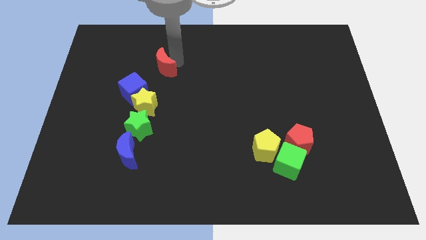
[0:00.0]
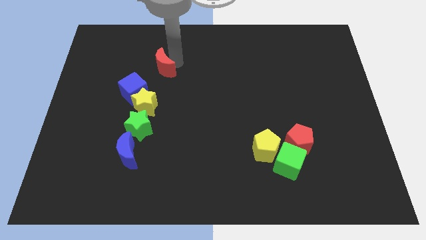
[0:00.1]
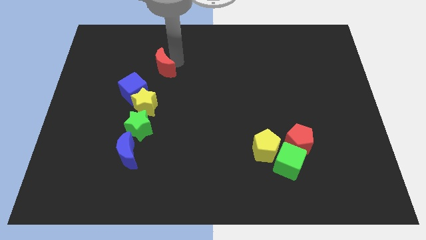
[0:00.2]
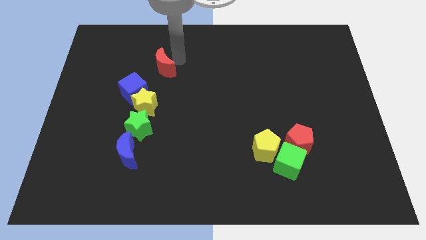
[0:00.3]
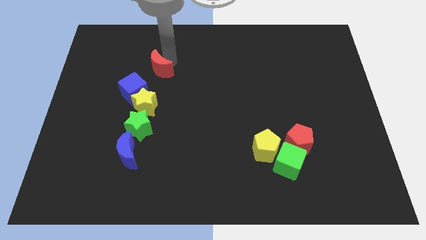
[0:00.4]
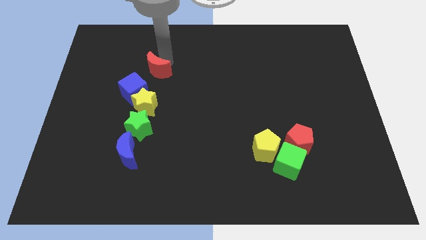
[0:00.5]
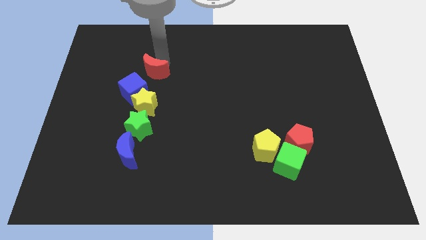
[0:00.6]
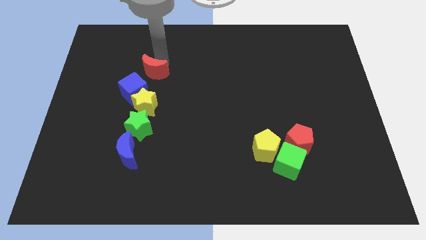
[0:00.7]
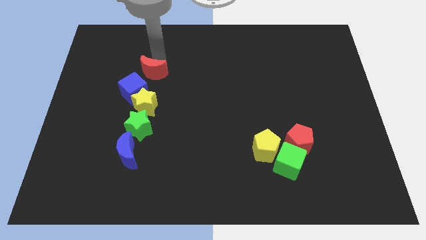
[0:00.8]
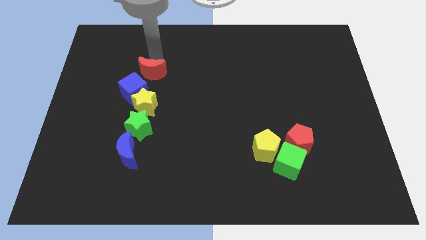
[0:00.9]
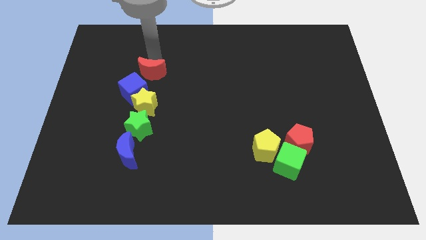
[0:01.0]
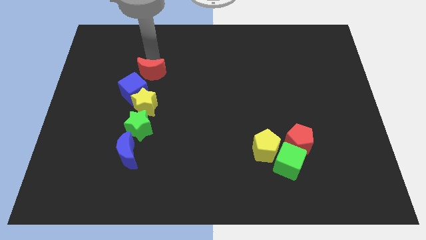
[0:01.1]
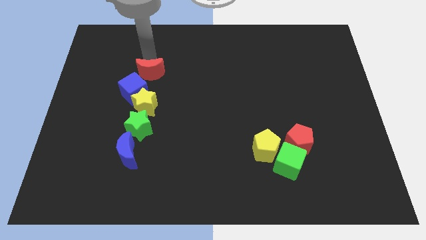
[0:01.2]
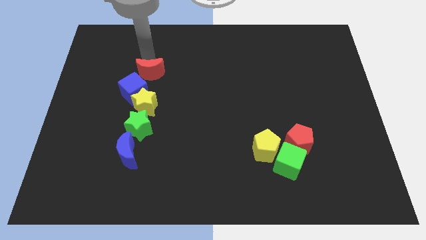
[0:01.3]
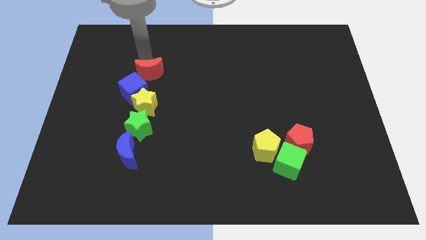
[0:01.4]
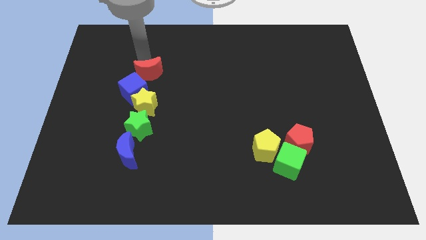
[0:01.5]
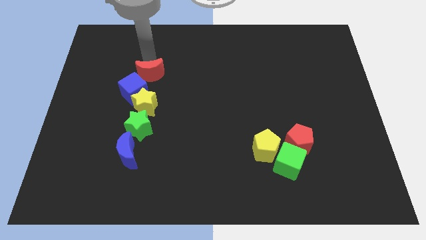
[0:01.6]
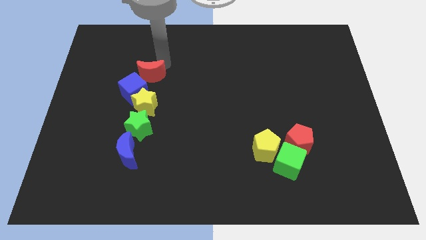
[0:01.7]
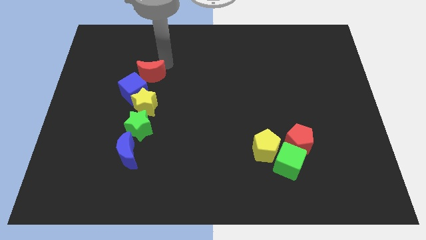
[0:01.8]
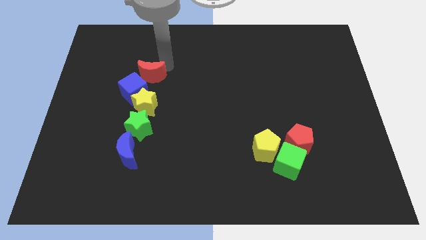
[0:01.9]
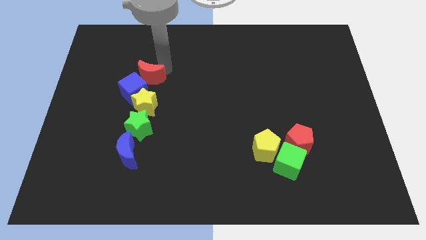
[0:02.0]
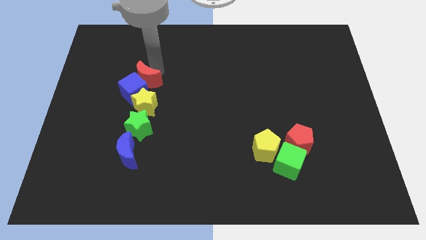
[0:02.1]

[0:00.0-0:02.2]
place the red moon close to the blue cube

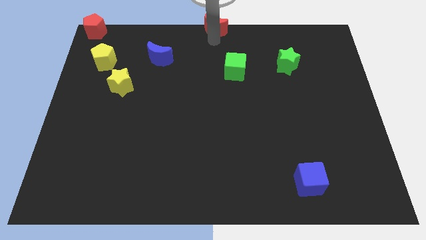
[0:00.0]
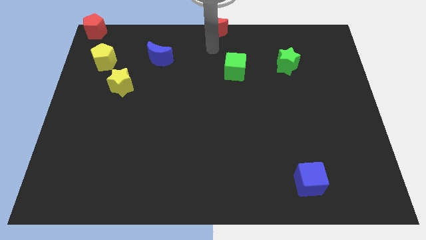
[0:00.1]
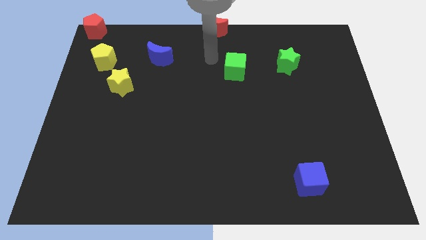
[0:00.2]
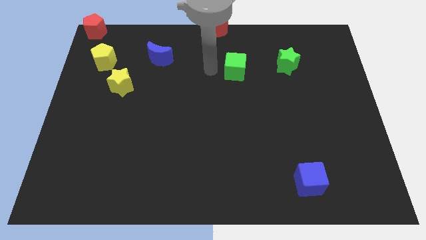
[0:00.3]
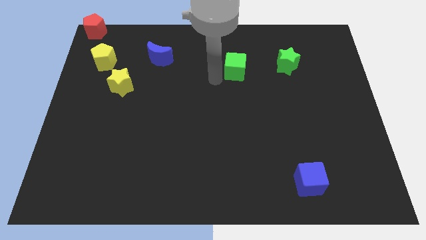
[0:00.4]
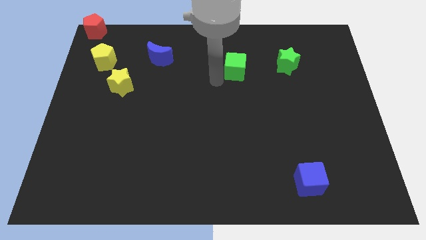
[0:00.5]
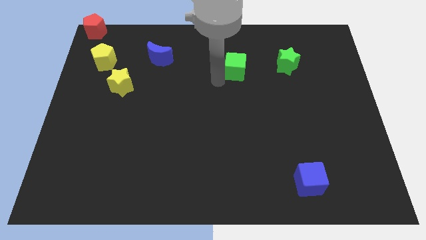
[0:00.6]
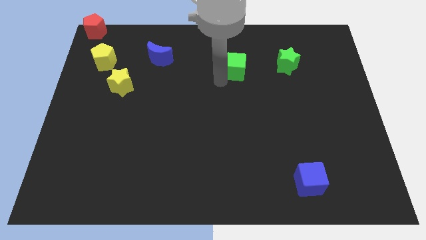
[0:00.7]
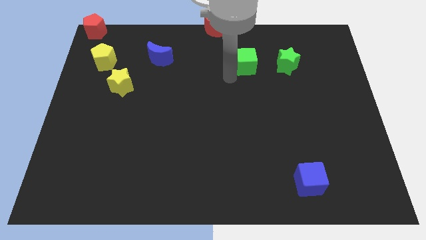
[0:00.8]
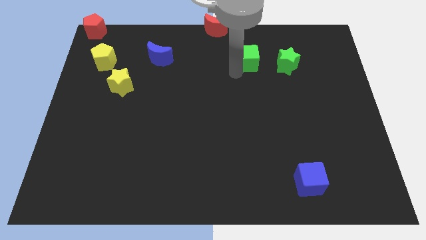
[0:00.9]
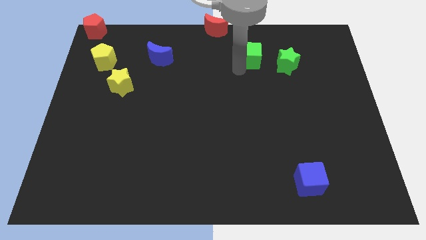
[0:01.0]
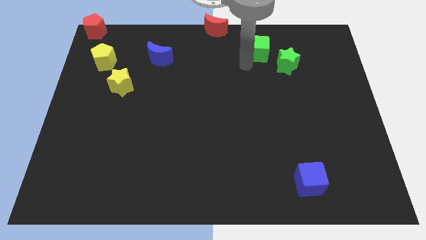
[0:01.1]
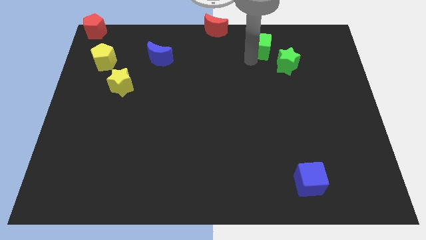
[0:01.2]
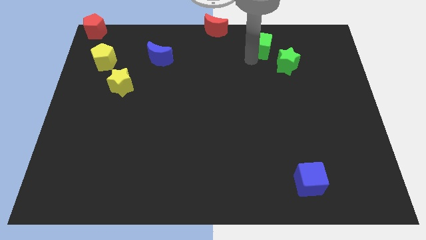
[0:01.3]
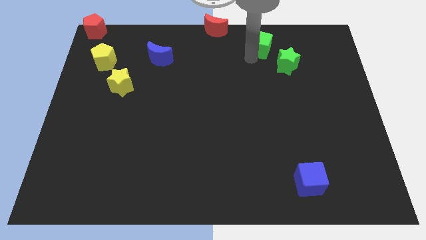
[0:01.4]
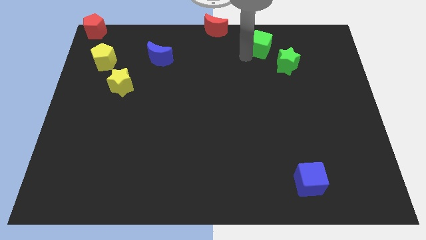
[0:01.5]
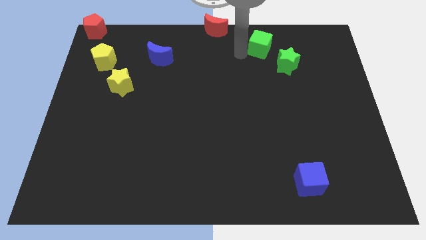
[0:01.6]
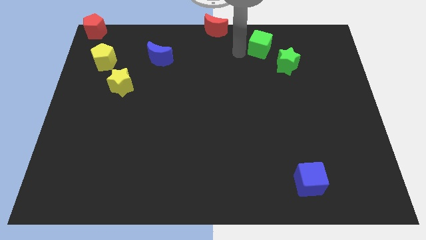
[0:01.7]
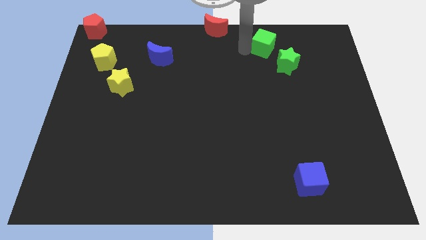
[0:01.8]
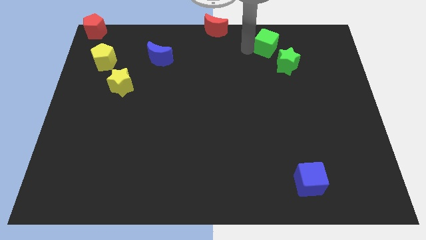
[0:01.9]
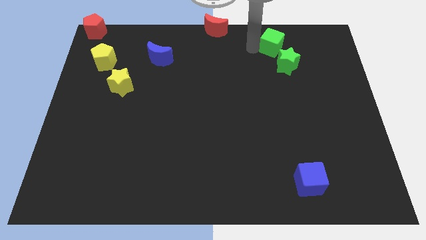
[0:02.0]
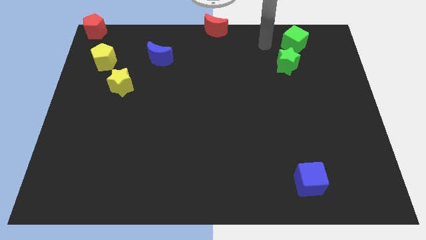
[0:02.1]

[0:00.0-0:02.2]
push the green cube to the top of the green star

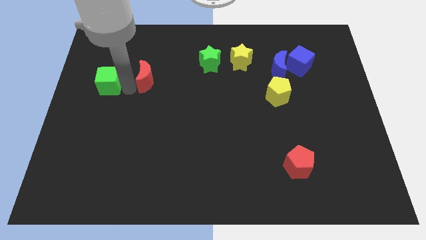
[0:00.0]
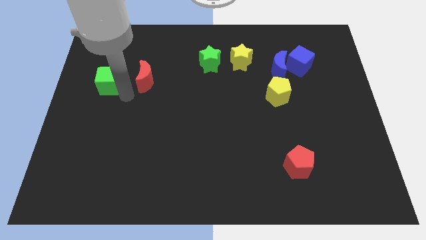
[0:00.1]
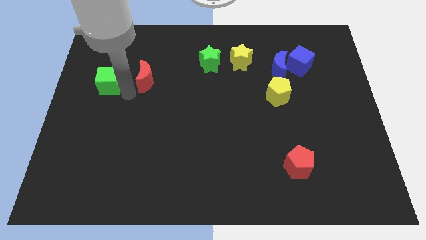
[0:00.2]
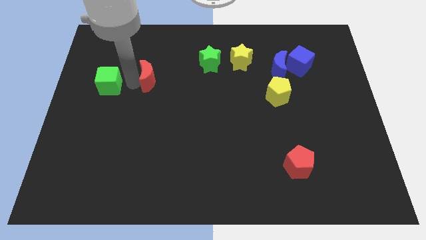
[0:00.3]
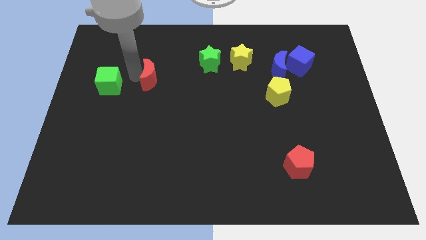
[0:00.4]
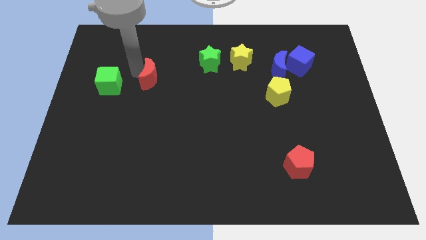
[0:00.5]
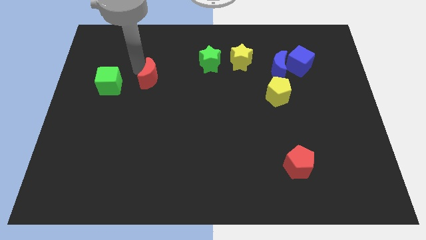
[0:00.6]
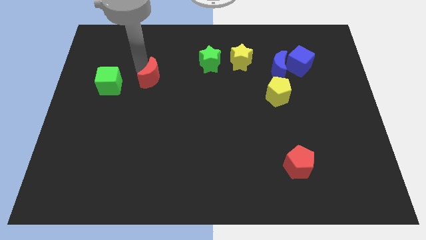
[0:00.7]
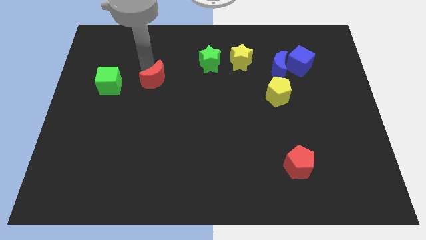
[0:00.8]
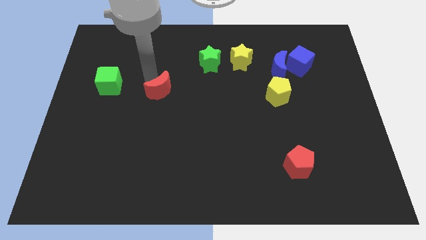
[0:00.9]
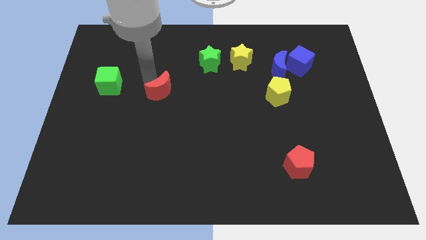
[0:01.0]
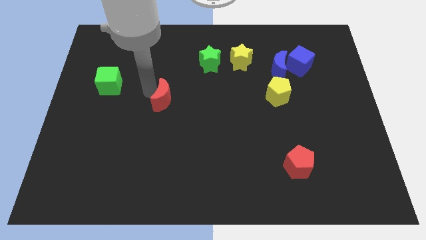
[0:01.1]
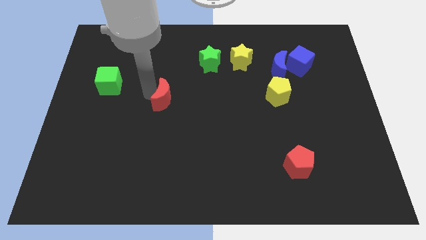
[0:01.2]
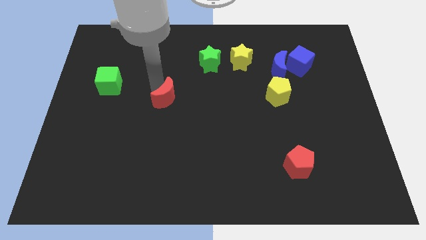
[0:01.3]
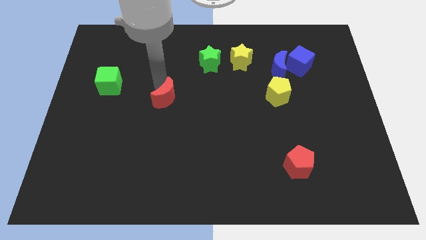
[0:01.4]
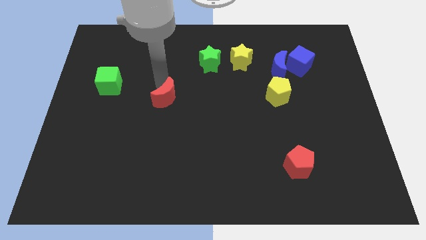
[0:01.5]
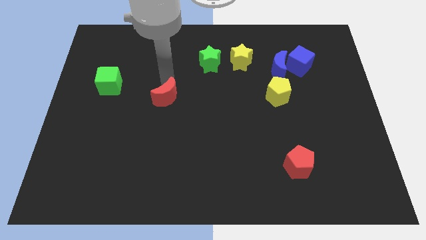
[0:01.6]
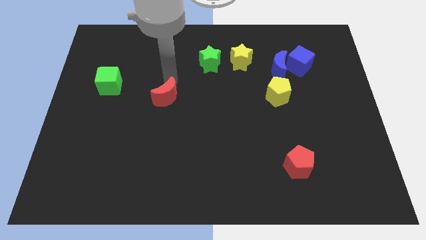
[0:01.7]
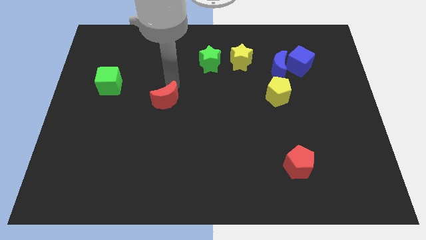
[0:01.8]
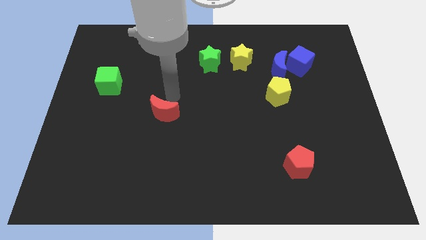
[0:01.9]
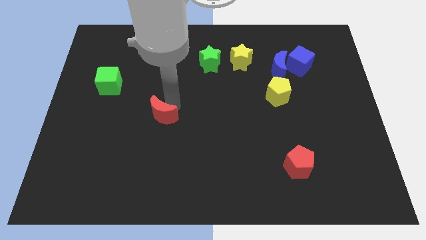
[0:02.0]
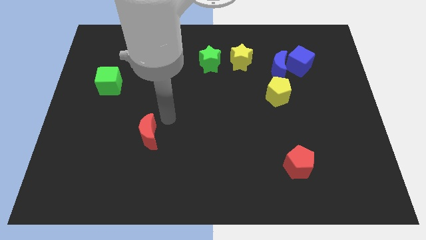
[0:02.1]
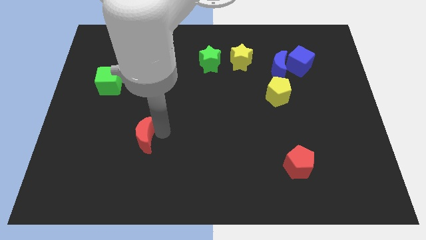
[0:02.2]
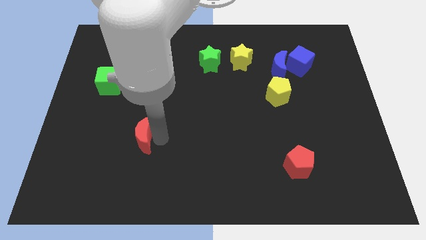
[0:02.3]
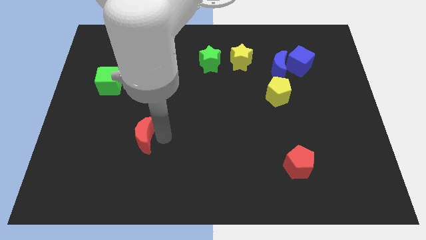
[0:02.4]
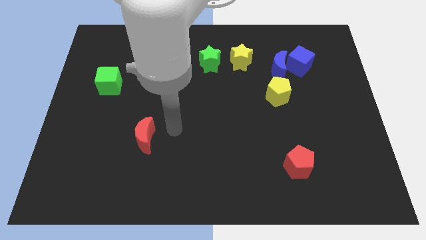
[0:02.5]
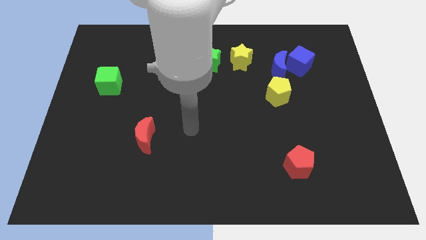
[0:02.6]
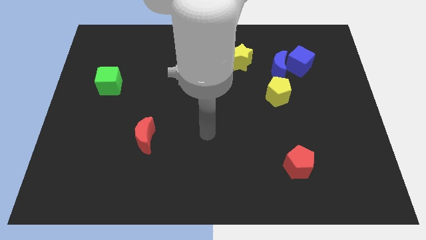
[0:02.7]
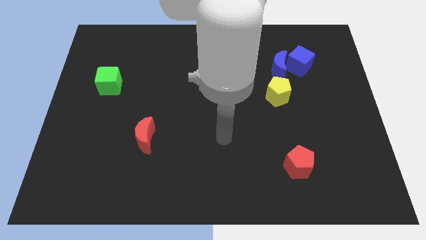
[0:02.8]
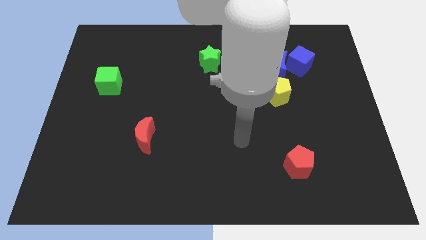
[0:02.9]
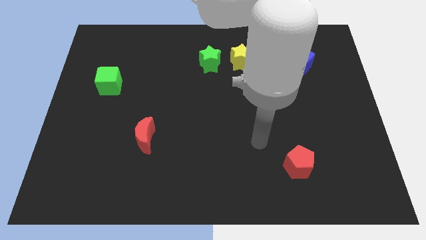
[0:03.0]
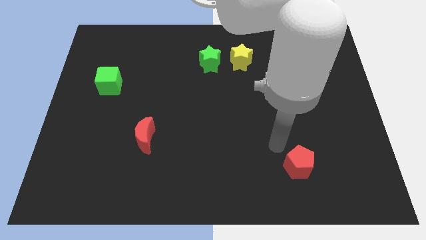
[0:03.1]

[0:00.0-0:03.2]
push the red moon diagonally bottom right to the green cube

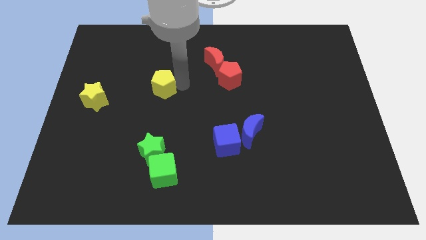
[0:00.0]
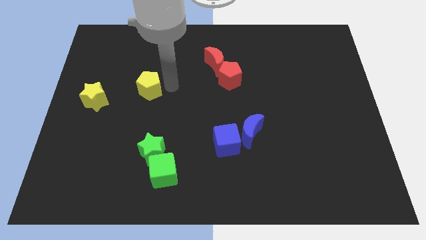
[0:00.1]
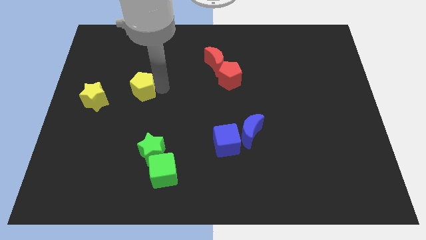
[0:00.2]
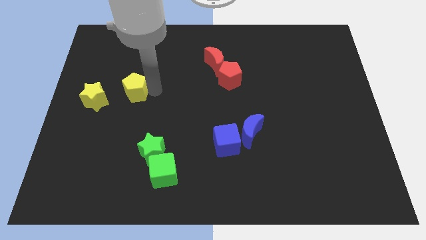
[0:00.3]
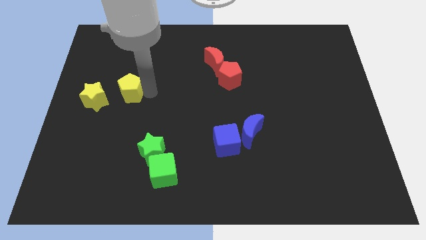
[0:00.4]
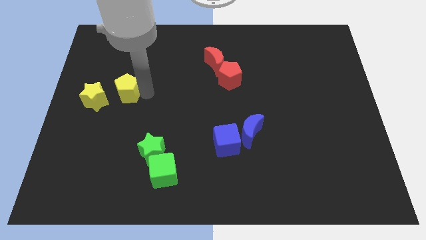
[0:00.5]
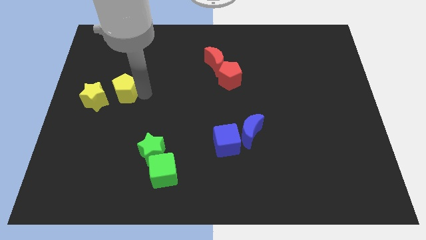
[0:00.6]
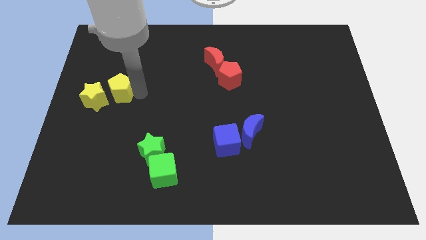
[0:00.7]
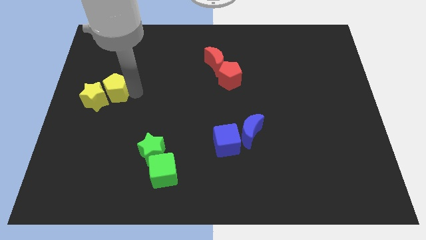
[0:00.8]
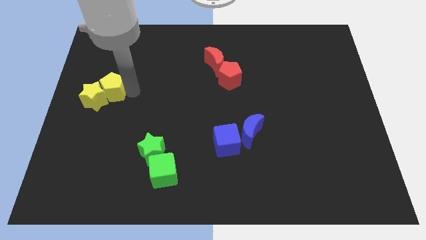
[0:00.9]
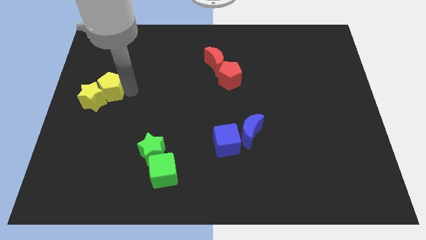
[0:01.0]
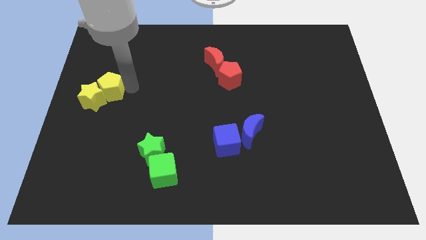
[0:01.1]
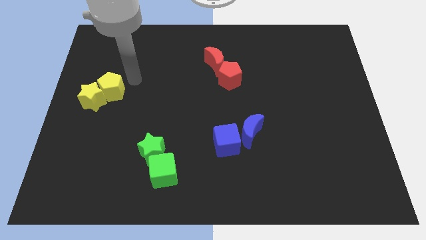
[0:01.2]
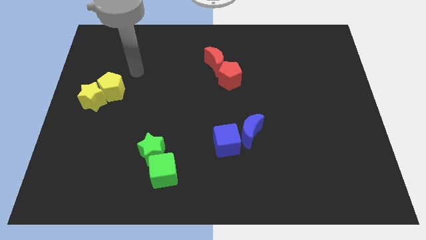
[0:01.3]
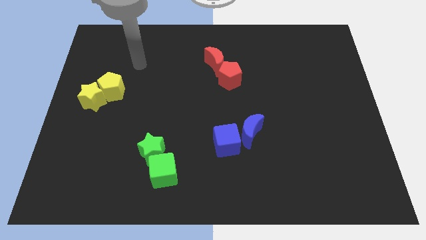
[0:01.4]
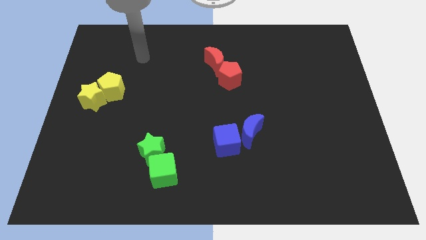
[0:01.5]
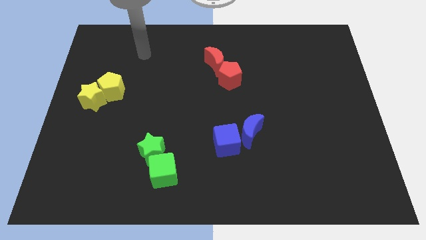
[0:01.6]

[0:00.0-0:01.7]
move the yellow pentagon to the right of the yellow star

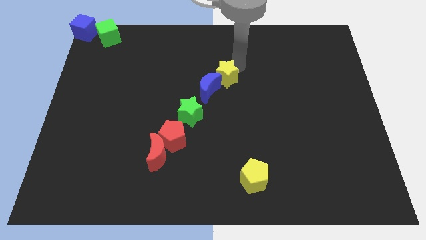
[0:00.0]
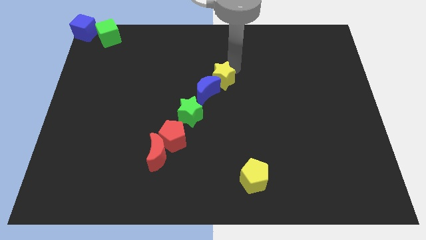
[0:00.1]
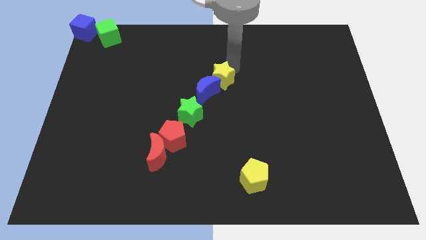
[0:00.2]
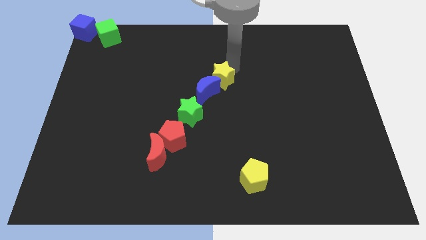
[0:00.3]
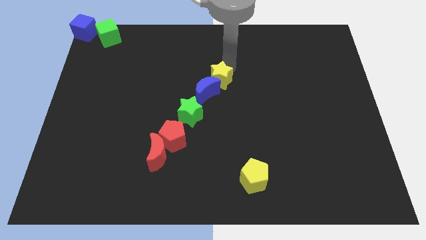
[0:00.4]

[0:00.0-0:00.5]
push yellow star into blue moon
